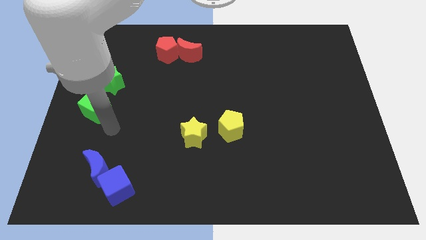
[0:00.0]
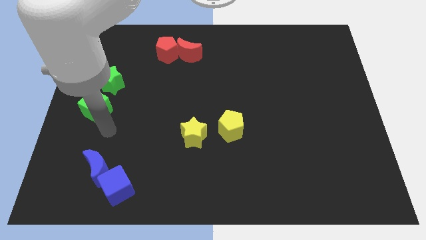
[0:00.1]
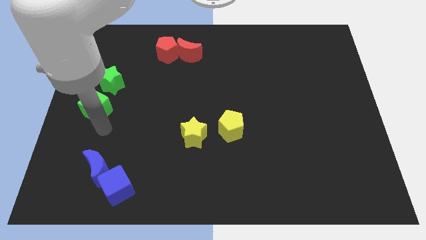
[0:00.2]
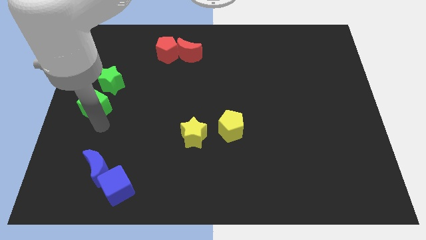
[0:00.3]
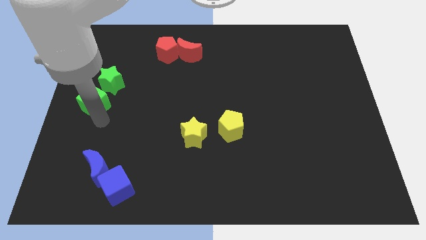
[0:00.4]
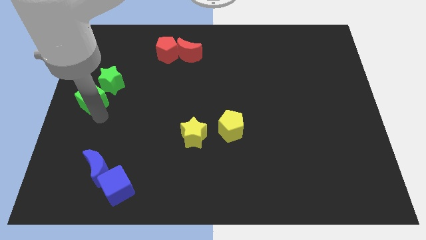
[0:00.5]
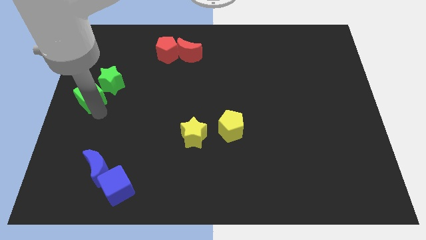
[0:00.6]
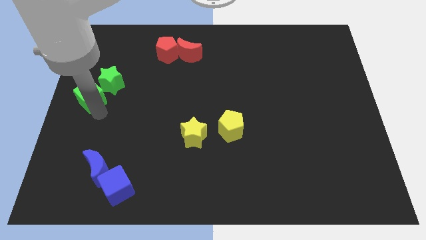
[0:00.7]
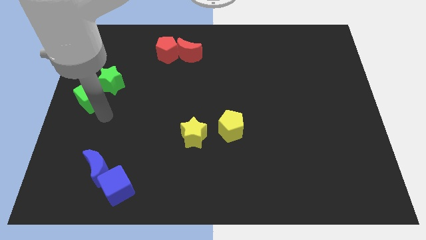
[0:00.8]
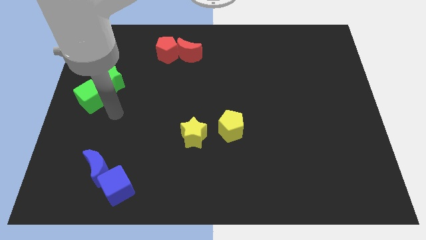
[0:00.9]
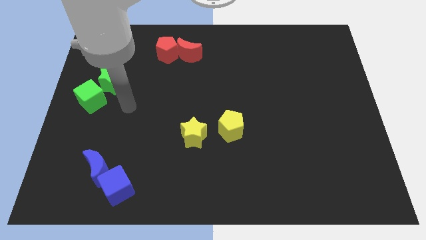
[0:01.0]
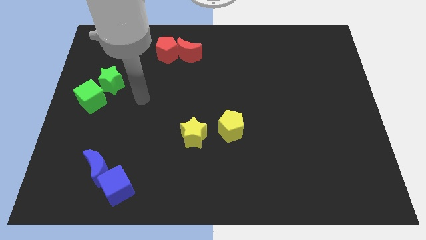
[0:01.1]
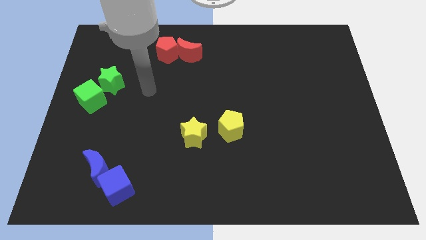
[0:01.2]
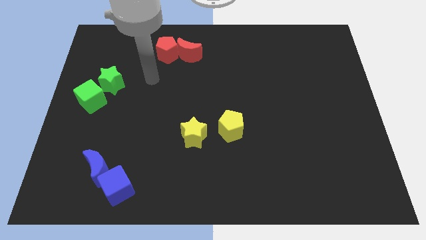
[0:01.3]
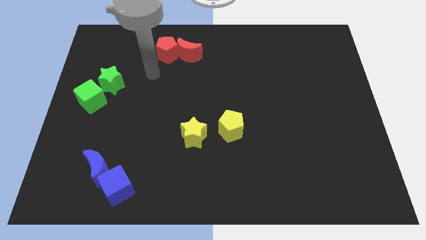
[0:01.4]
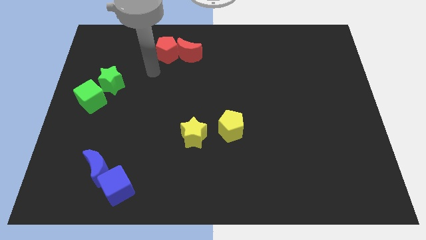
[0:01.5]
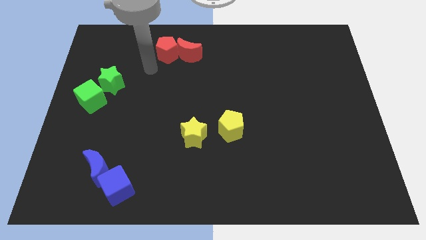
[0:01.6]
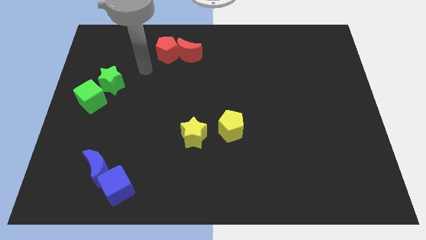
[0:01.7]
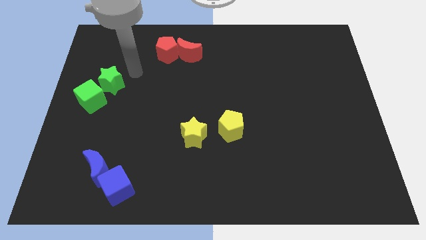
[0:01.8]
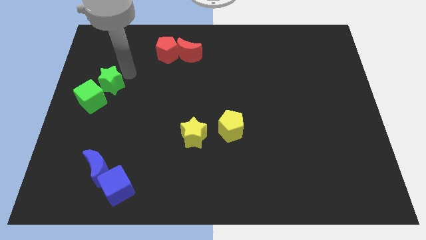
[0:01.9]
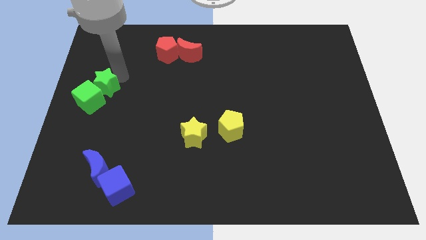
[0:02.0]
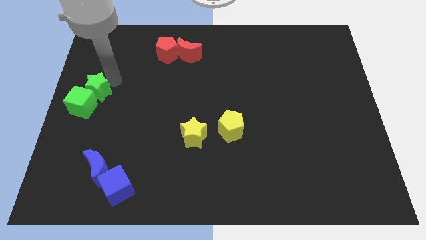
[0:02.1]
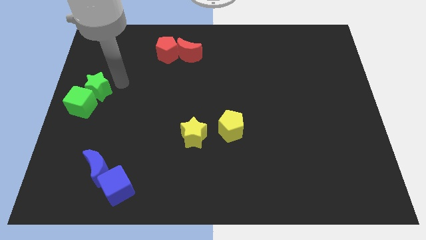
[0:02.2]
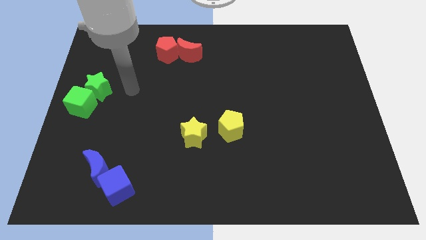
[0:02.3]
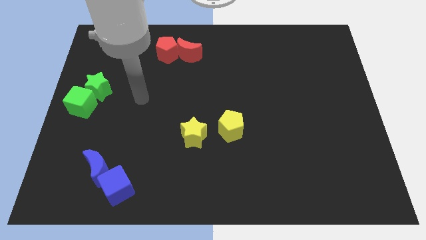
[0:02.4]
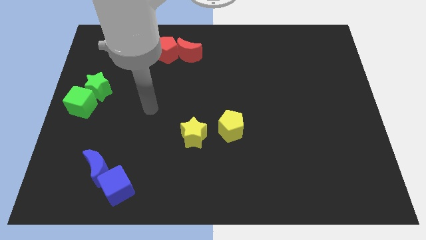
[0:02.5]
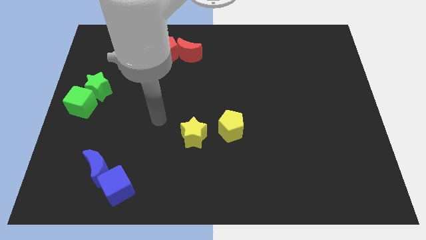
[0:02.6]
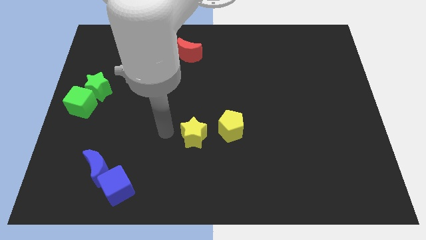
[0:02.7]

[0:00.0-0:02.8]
move the green blocks close to each other

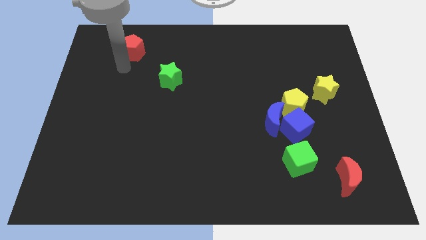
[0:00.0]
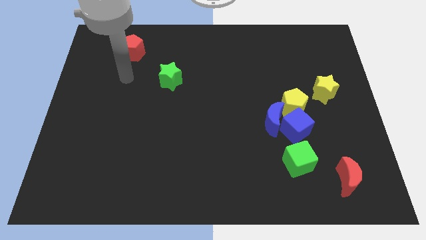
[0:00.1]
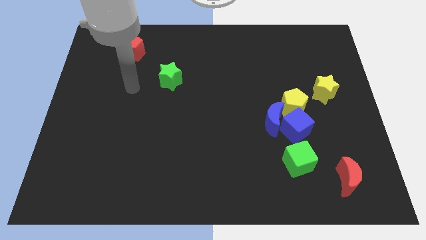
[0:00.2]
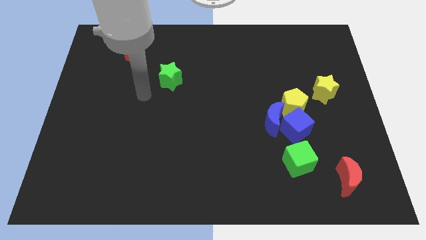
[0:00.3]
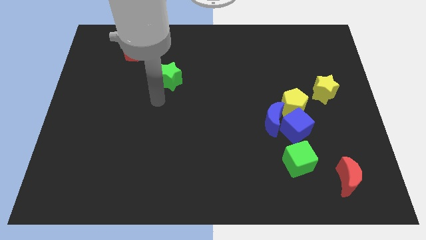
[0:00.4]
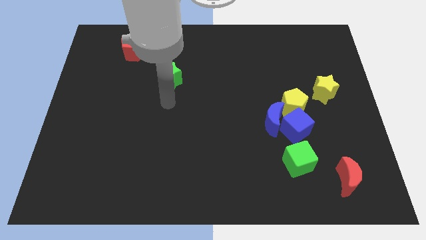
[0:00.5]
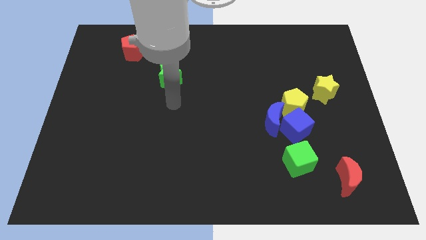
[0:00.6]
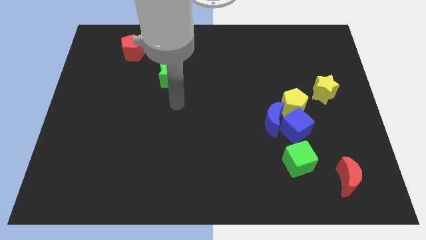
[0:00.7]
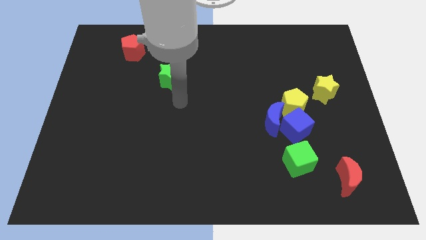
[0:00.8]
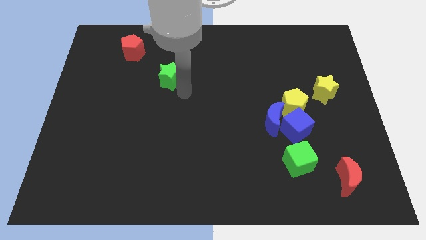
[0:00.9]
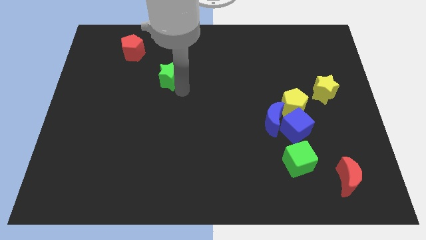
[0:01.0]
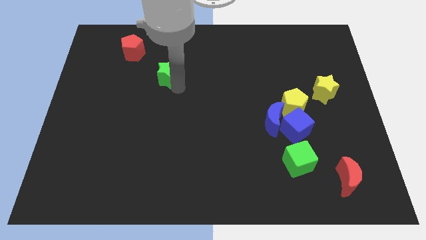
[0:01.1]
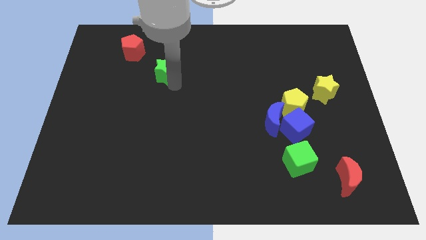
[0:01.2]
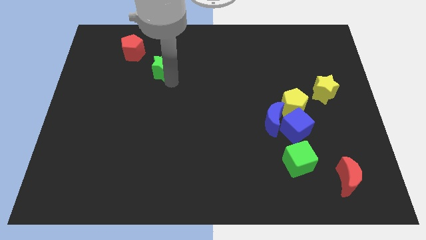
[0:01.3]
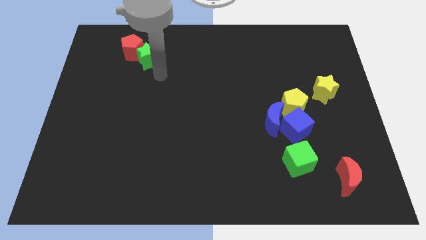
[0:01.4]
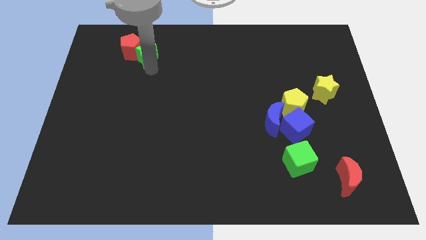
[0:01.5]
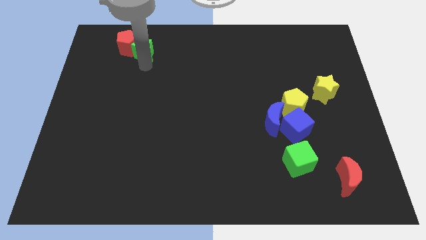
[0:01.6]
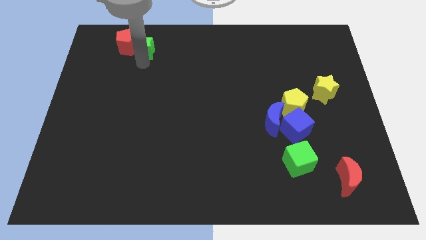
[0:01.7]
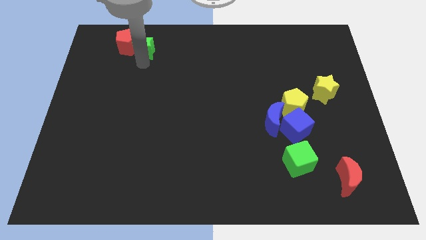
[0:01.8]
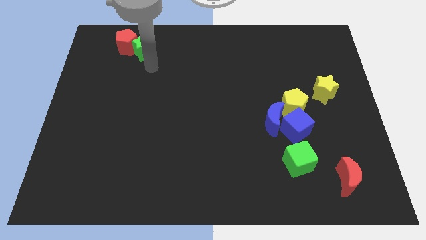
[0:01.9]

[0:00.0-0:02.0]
move the green star into the red pentagon

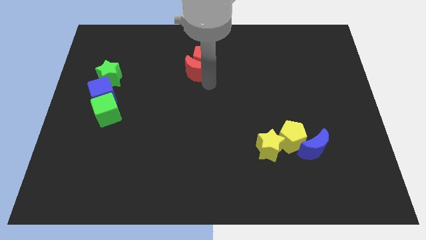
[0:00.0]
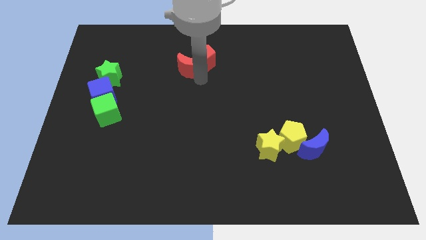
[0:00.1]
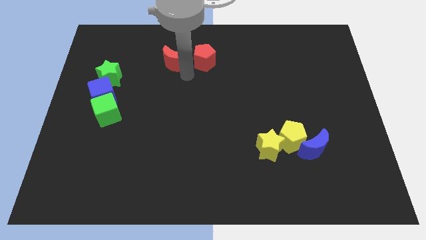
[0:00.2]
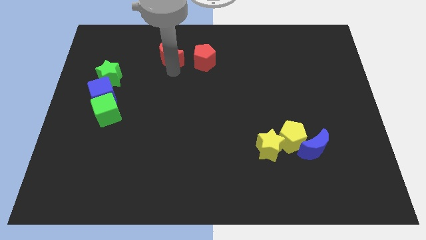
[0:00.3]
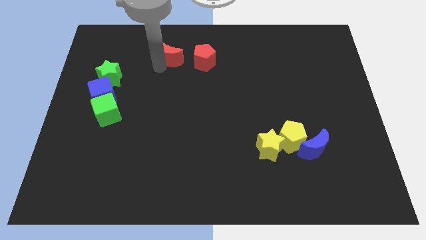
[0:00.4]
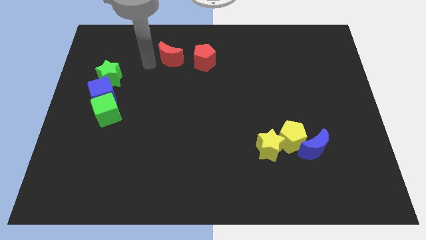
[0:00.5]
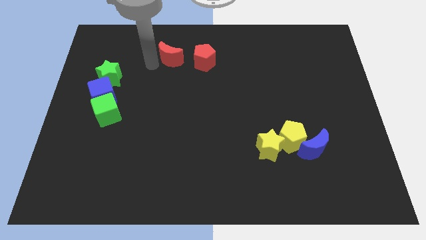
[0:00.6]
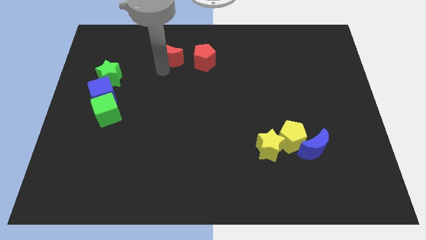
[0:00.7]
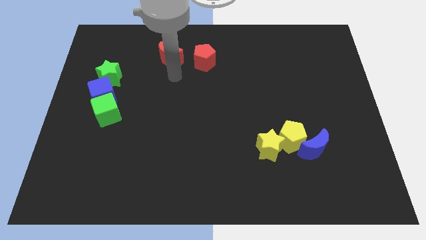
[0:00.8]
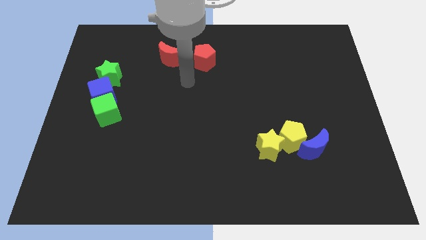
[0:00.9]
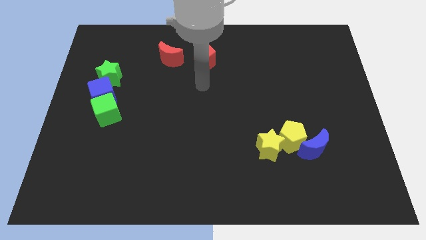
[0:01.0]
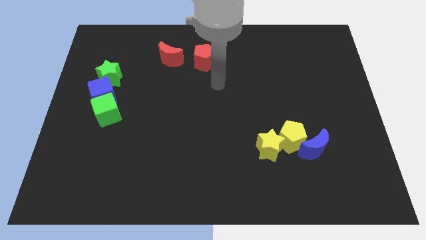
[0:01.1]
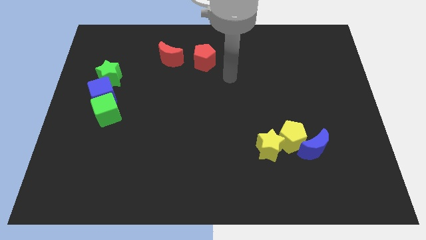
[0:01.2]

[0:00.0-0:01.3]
separate the red crescent from the red pentagon

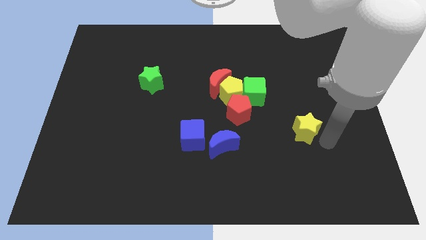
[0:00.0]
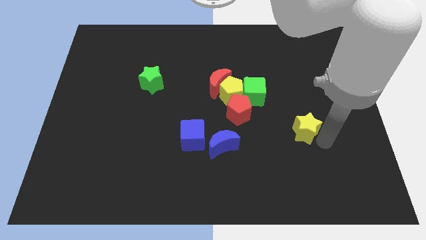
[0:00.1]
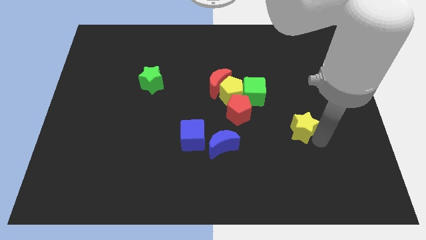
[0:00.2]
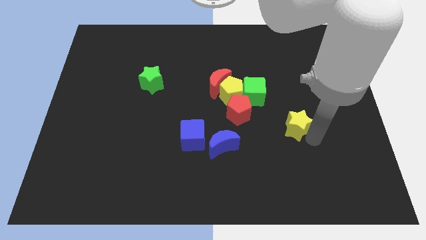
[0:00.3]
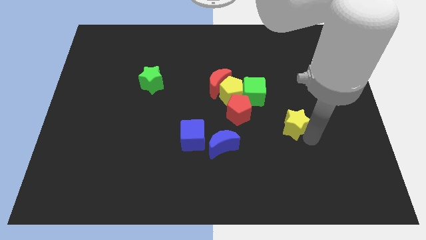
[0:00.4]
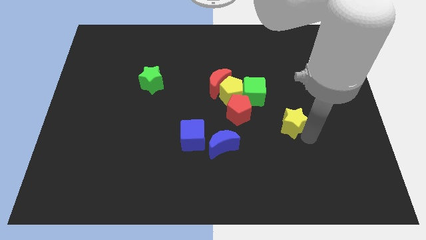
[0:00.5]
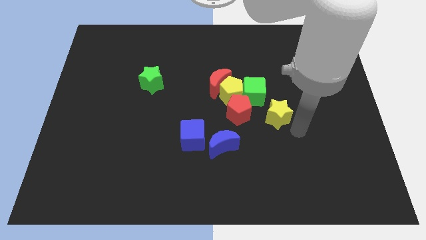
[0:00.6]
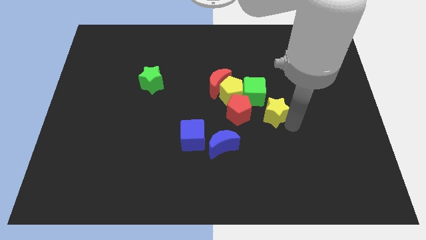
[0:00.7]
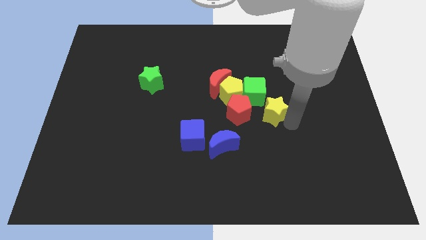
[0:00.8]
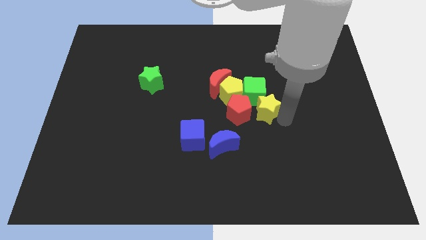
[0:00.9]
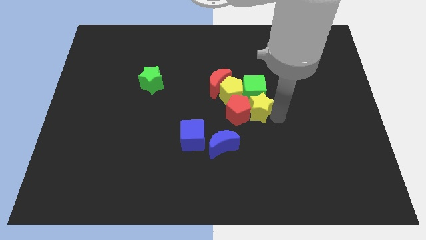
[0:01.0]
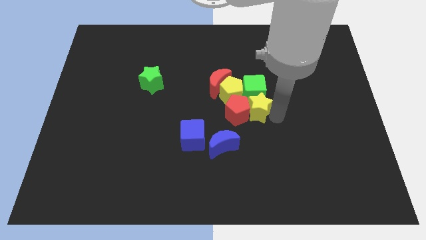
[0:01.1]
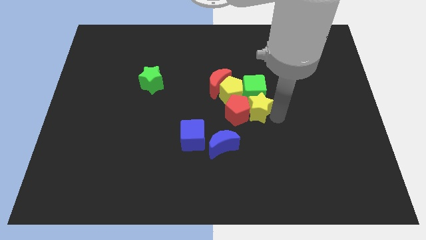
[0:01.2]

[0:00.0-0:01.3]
move the yellow star into the group of blocks

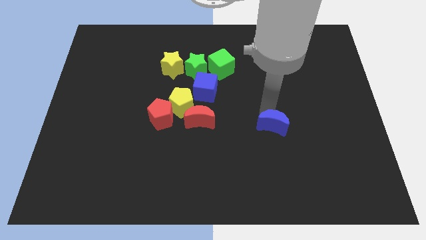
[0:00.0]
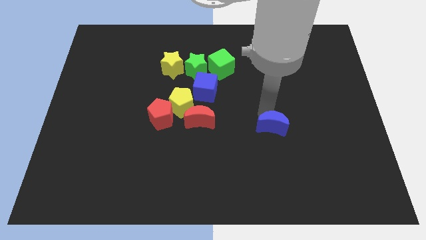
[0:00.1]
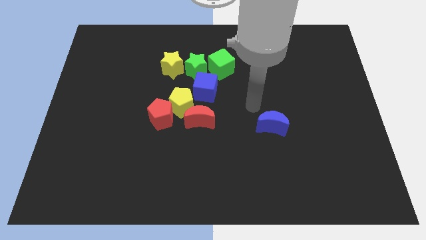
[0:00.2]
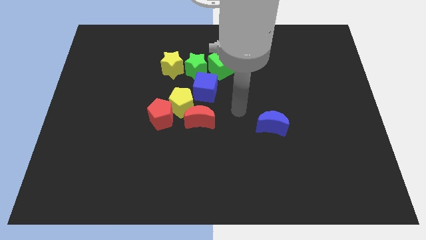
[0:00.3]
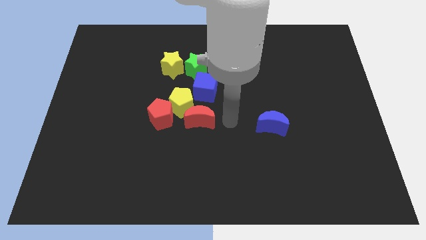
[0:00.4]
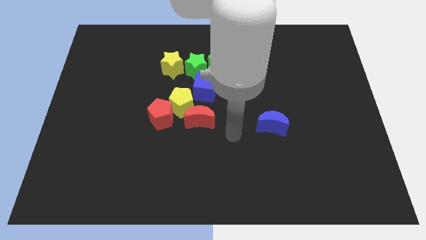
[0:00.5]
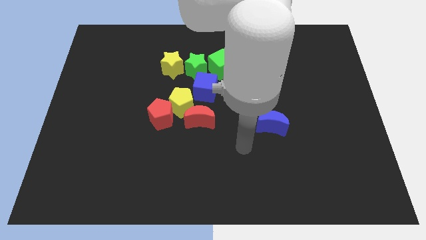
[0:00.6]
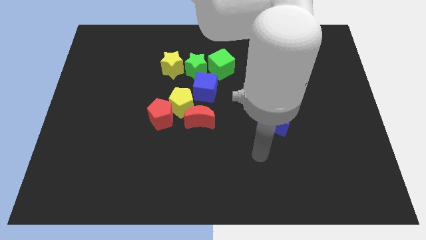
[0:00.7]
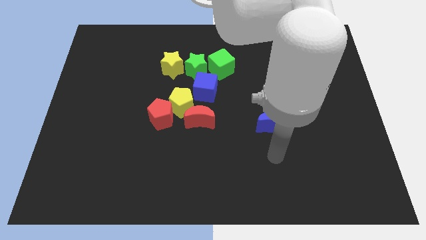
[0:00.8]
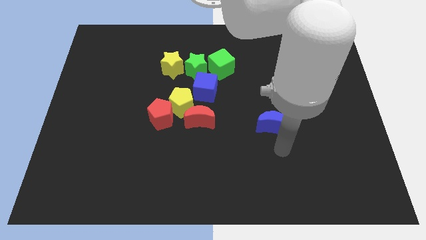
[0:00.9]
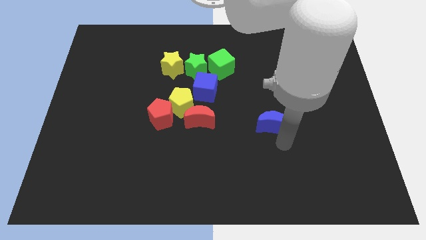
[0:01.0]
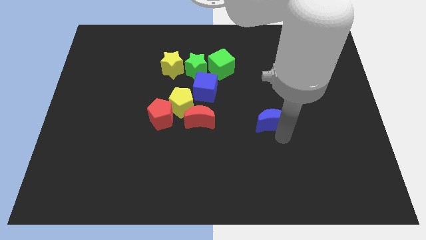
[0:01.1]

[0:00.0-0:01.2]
place the arm down to the blue moon

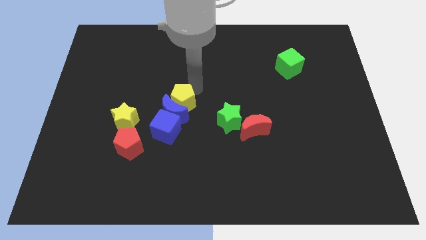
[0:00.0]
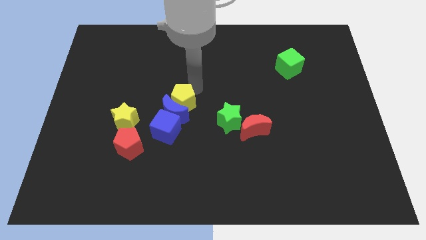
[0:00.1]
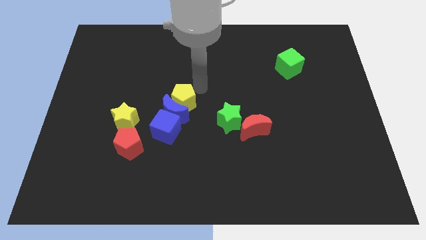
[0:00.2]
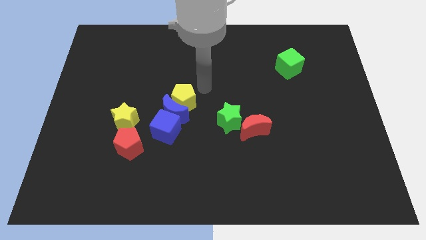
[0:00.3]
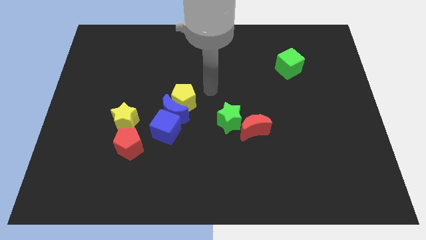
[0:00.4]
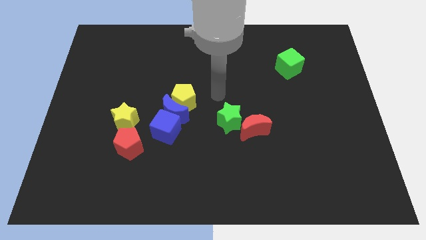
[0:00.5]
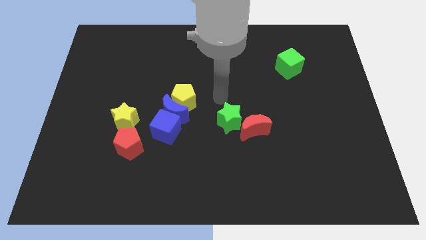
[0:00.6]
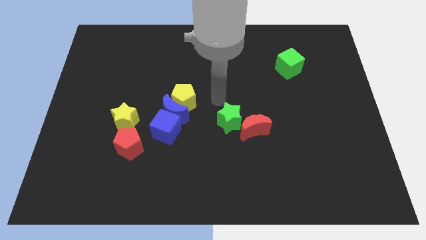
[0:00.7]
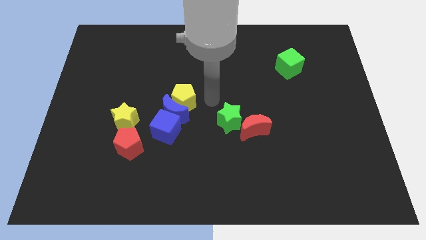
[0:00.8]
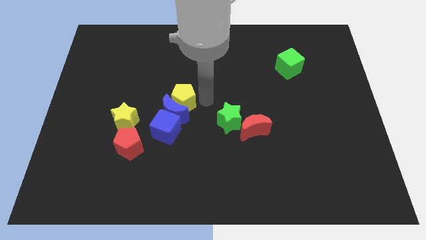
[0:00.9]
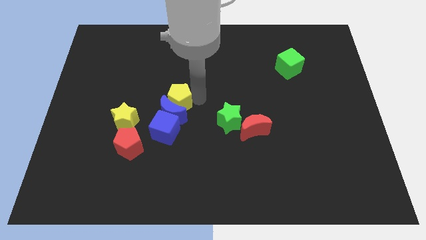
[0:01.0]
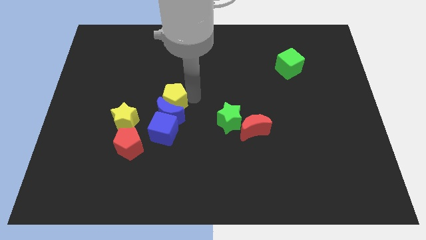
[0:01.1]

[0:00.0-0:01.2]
move the arm into the yellow pentagon
